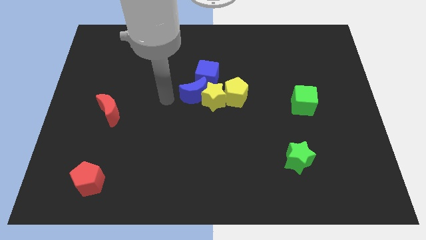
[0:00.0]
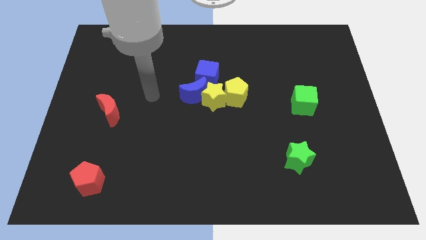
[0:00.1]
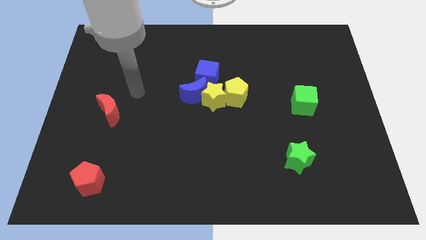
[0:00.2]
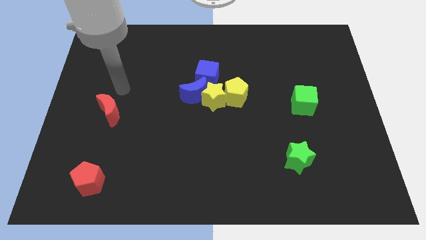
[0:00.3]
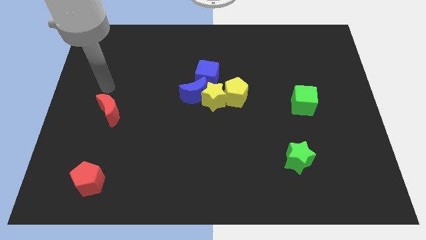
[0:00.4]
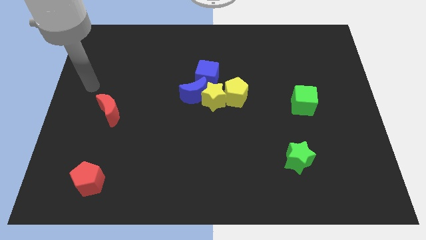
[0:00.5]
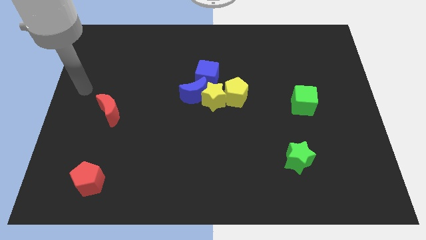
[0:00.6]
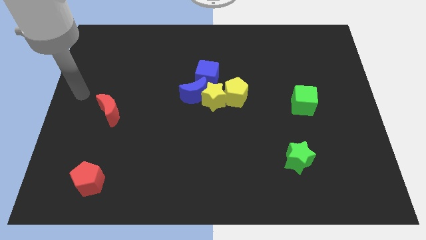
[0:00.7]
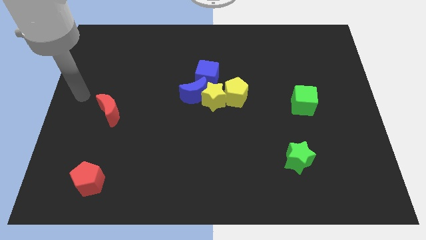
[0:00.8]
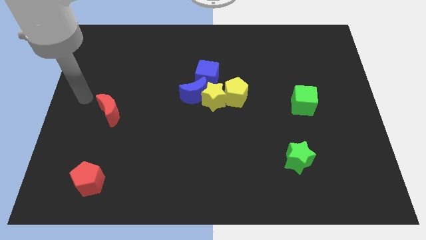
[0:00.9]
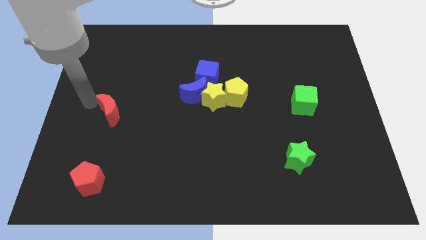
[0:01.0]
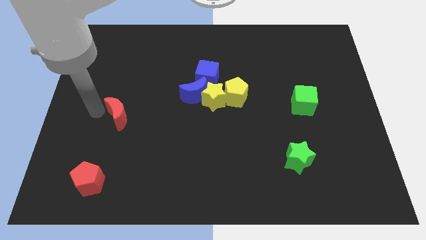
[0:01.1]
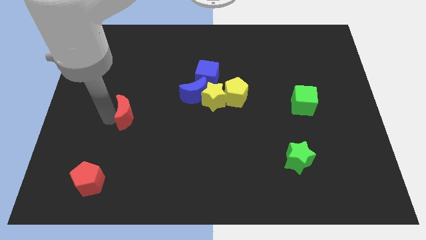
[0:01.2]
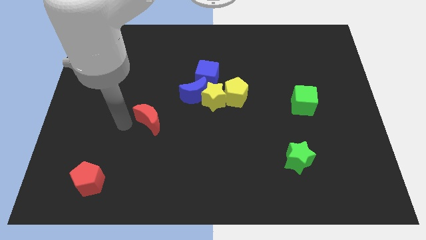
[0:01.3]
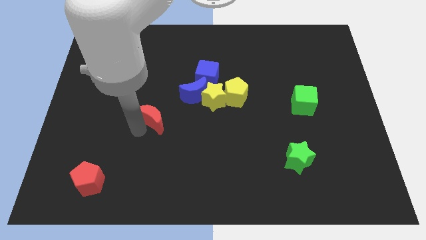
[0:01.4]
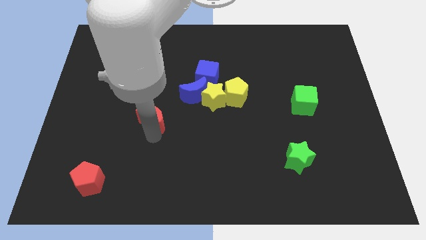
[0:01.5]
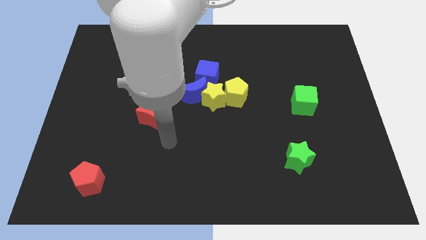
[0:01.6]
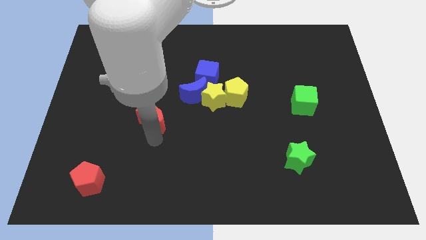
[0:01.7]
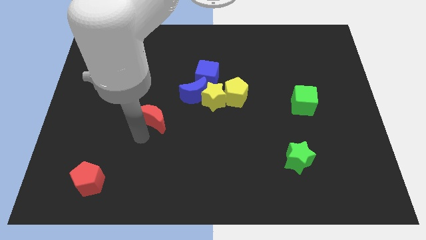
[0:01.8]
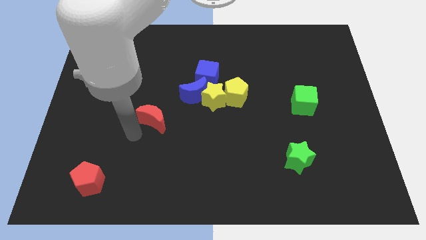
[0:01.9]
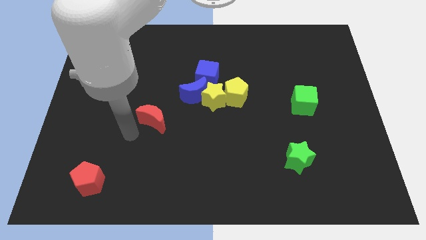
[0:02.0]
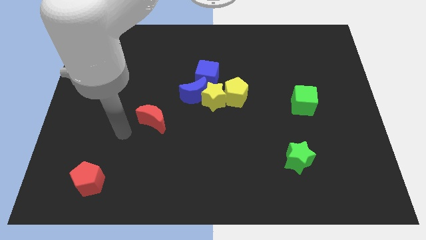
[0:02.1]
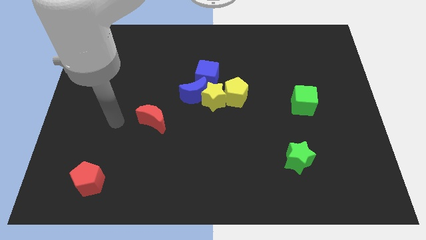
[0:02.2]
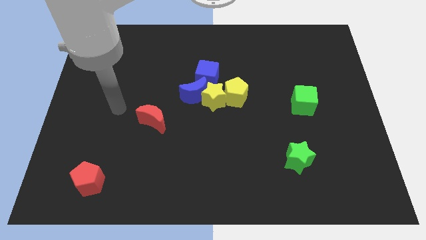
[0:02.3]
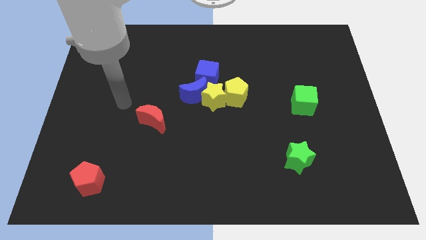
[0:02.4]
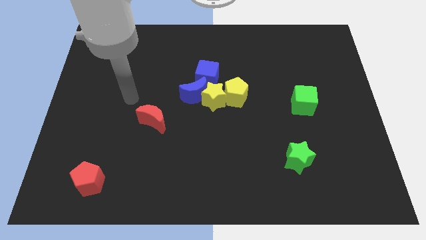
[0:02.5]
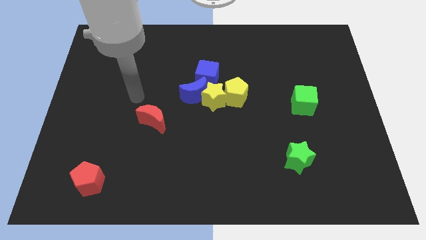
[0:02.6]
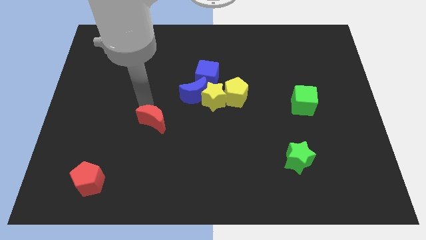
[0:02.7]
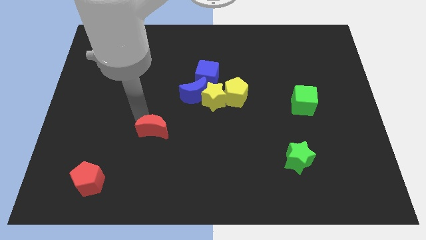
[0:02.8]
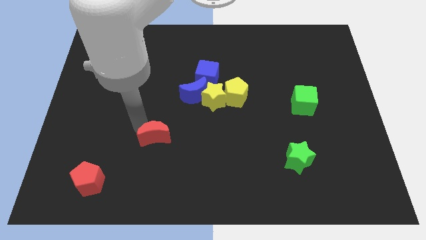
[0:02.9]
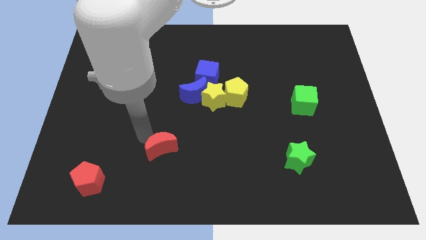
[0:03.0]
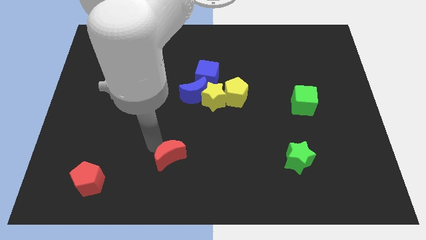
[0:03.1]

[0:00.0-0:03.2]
push the red crescent to the bottom of the board

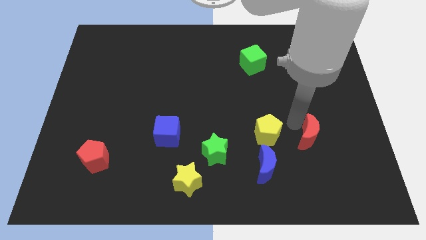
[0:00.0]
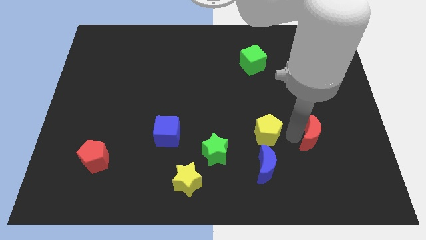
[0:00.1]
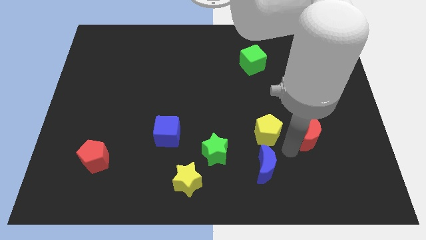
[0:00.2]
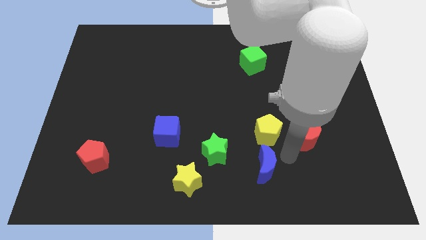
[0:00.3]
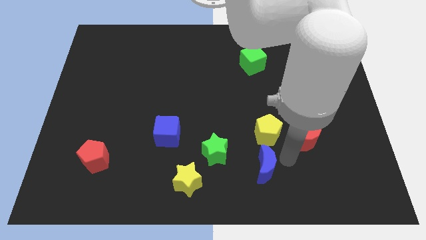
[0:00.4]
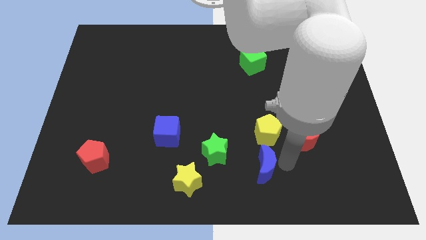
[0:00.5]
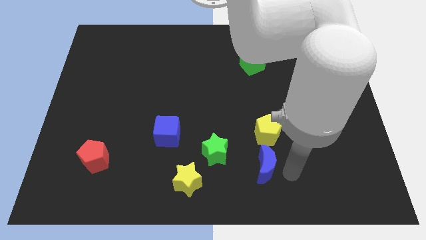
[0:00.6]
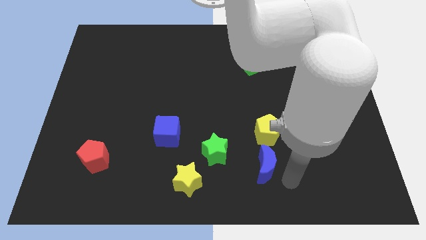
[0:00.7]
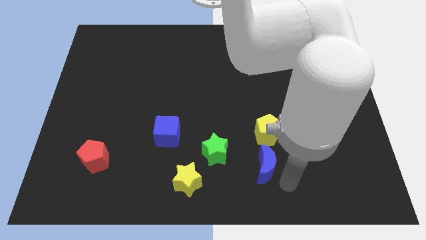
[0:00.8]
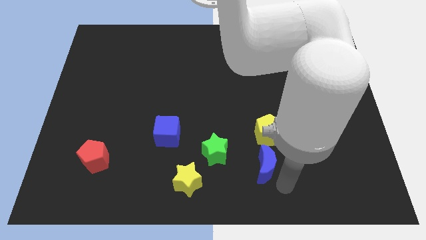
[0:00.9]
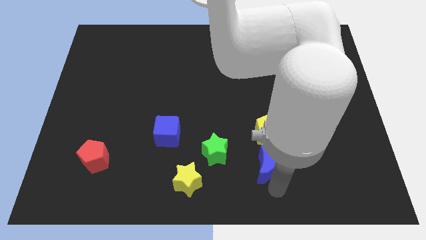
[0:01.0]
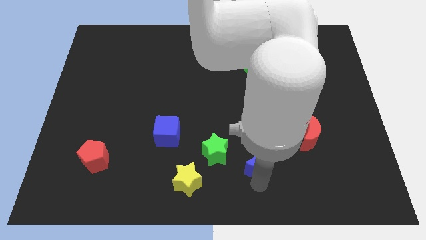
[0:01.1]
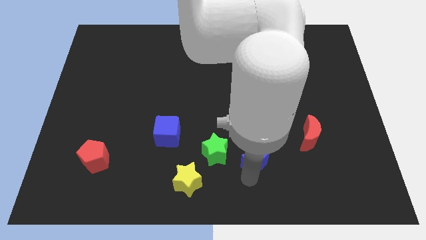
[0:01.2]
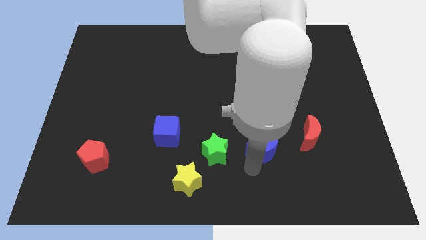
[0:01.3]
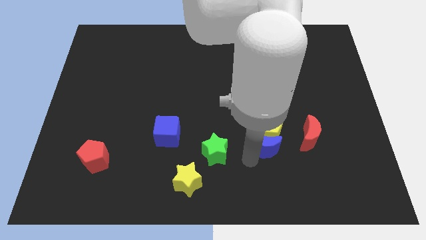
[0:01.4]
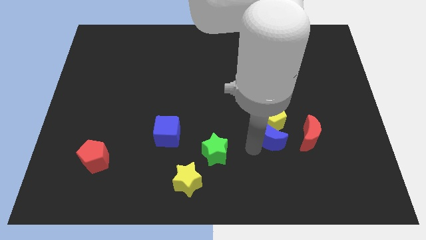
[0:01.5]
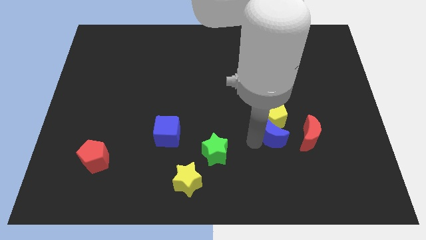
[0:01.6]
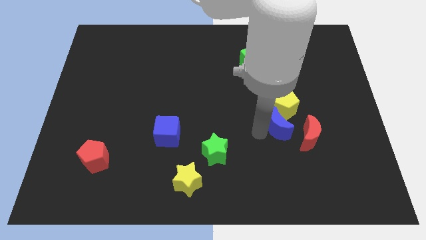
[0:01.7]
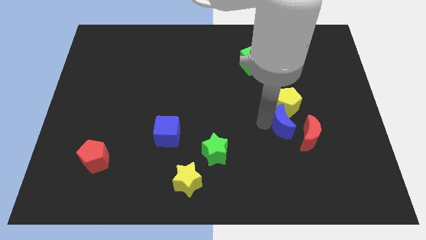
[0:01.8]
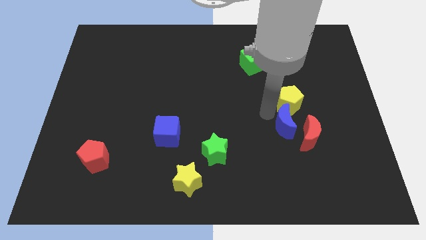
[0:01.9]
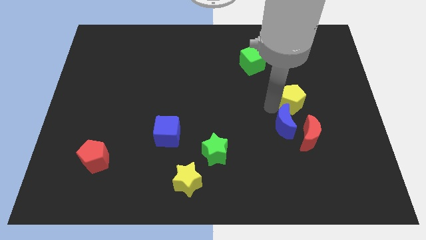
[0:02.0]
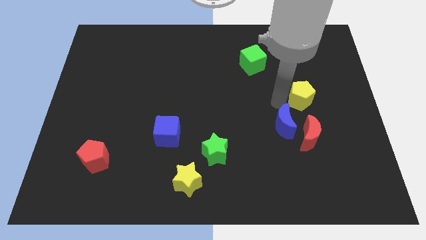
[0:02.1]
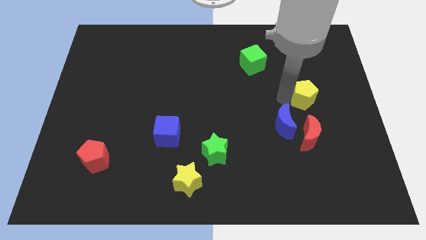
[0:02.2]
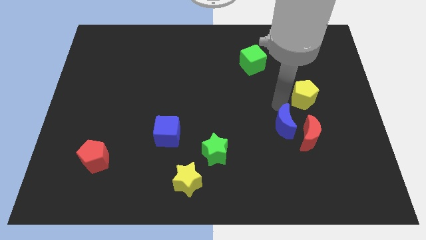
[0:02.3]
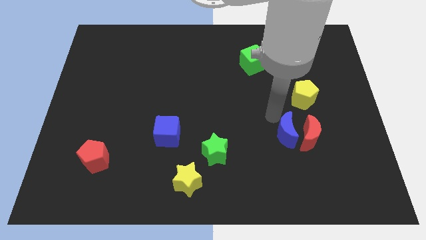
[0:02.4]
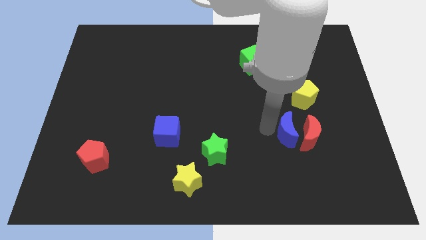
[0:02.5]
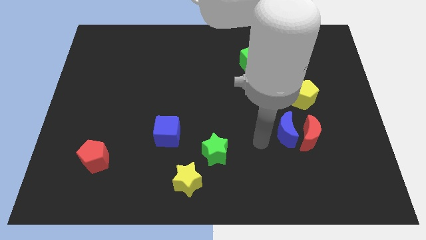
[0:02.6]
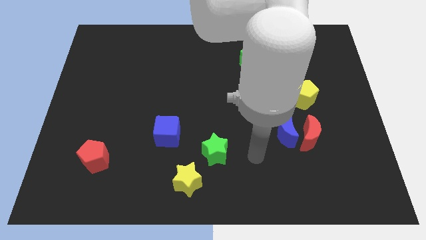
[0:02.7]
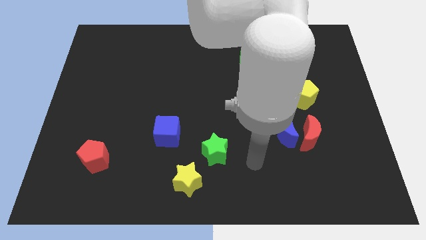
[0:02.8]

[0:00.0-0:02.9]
place the yellow pentagon above the red moon

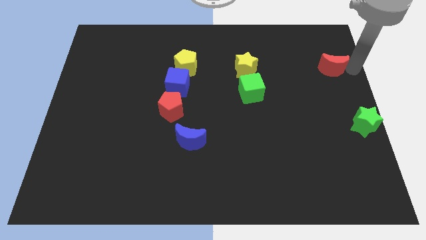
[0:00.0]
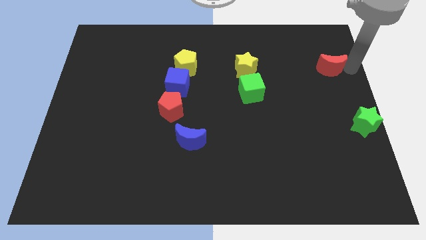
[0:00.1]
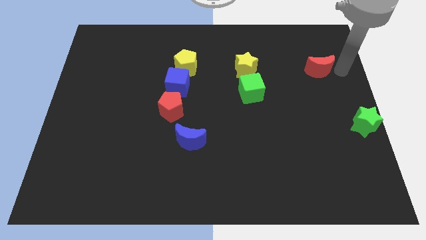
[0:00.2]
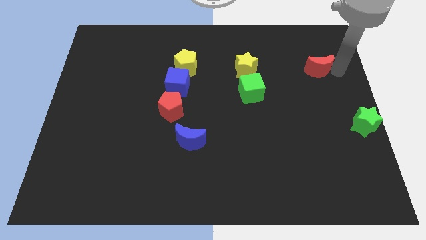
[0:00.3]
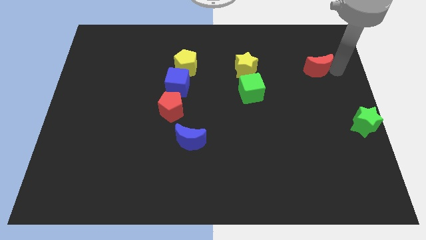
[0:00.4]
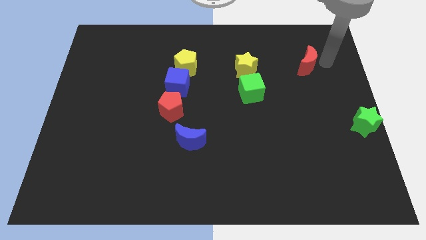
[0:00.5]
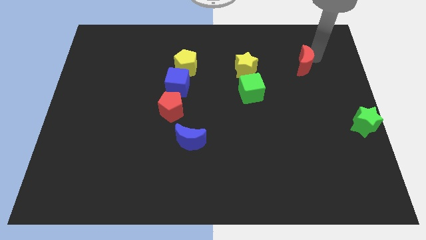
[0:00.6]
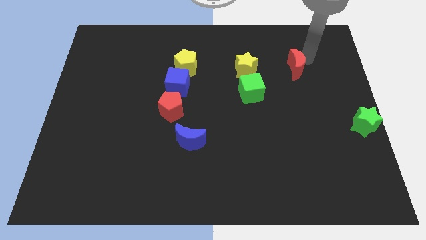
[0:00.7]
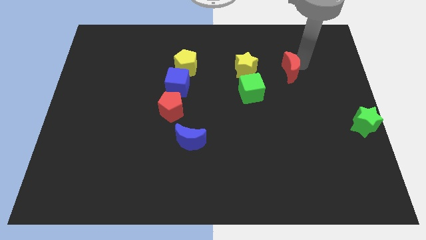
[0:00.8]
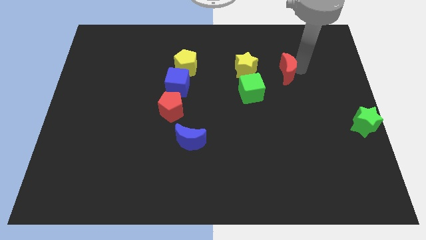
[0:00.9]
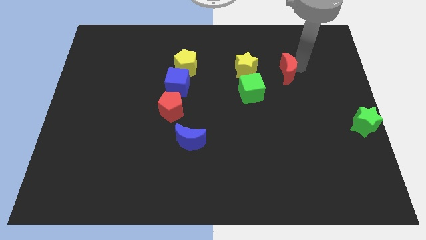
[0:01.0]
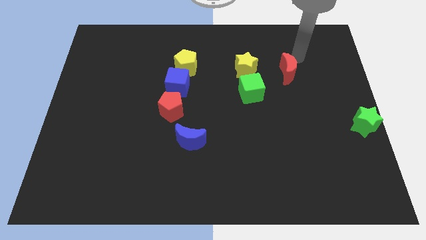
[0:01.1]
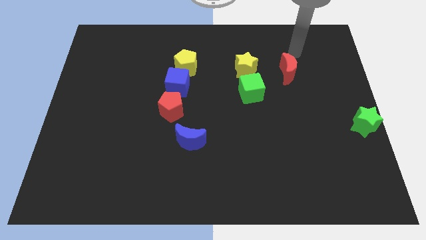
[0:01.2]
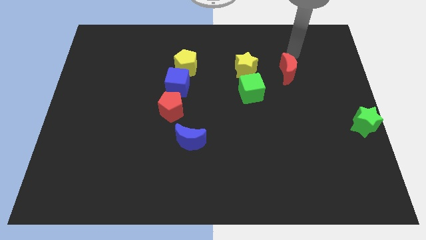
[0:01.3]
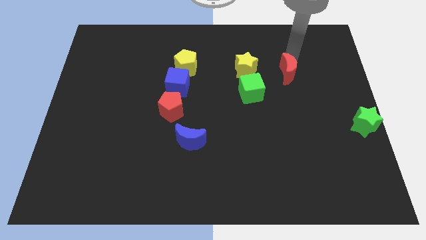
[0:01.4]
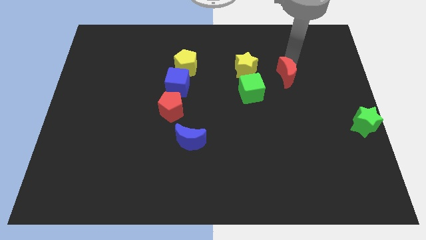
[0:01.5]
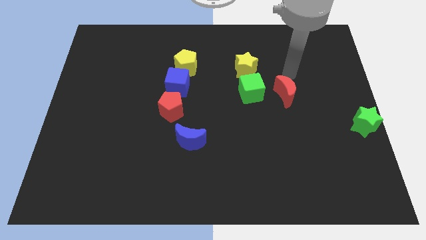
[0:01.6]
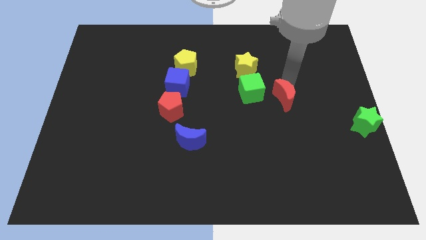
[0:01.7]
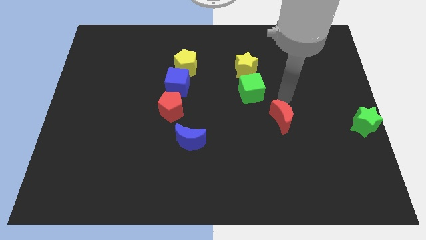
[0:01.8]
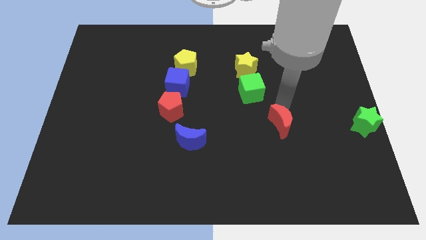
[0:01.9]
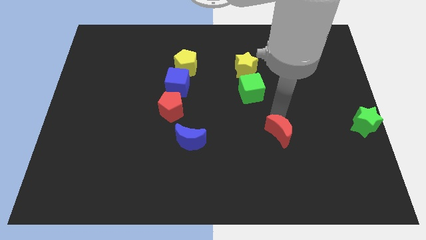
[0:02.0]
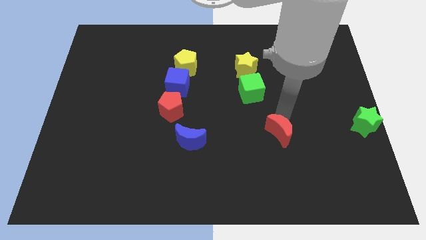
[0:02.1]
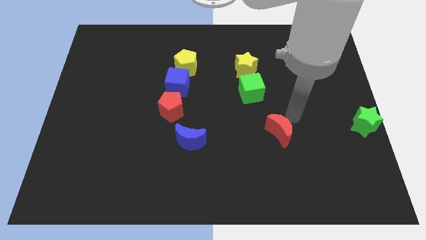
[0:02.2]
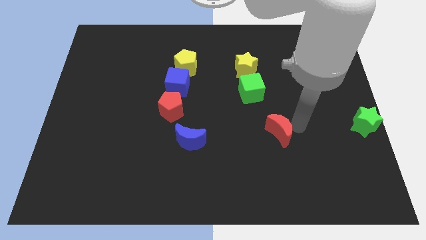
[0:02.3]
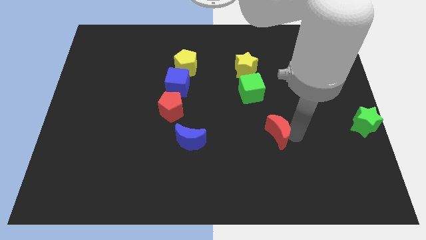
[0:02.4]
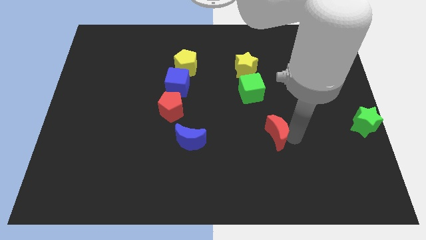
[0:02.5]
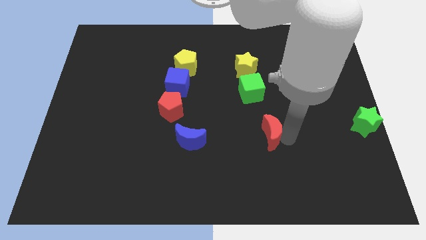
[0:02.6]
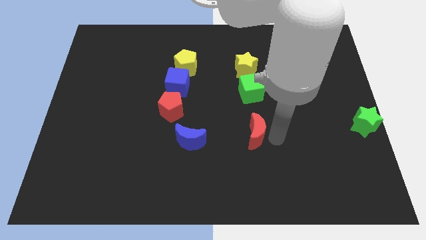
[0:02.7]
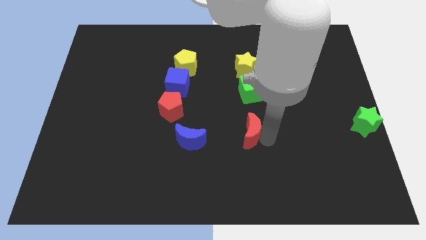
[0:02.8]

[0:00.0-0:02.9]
place the red moon down to the green cube
